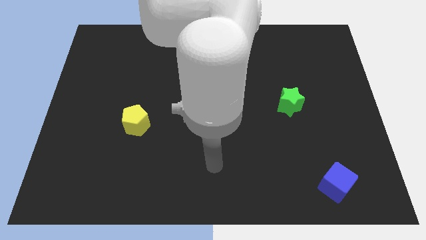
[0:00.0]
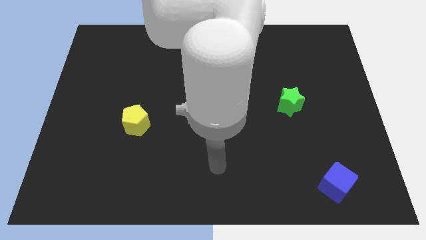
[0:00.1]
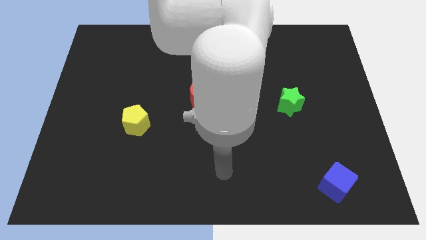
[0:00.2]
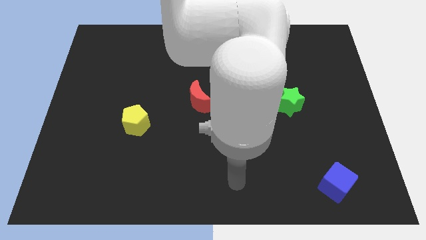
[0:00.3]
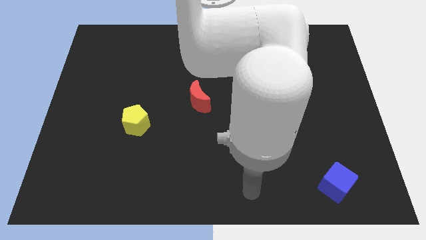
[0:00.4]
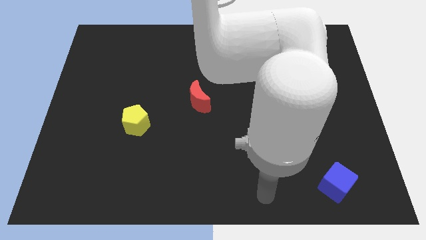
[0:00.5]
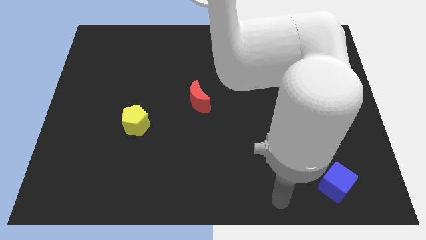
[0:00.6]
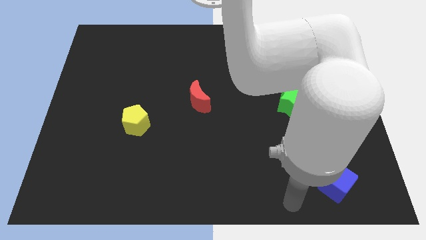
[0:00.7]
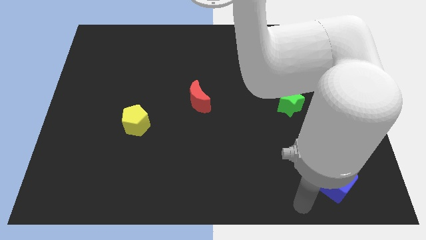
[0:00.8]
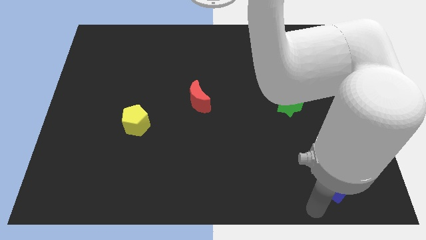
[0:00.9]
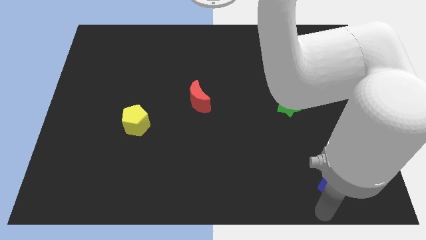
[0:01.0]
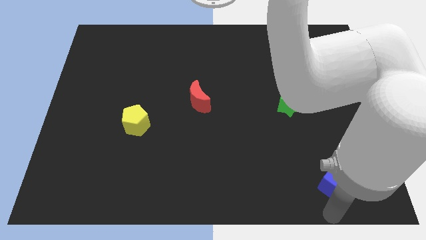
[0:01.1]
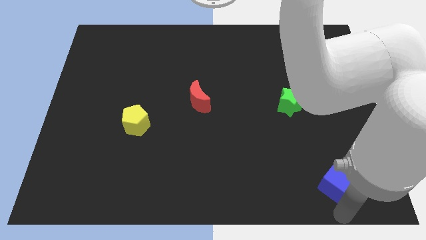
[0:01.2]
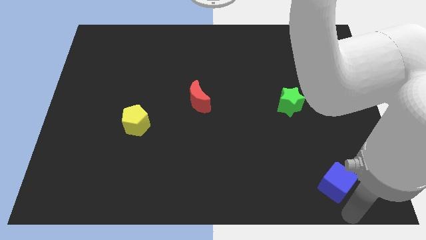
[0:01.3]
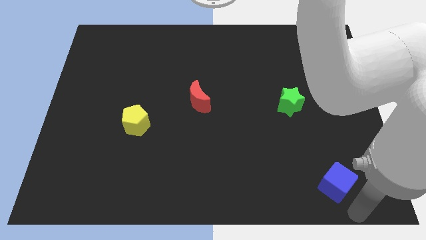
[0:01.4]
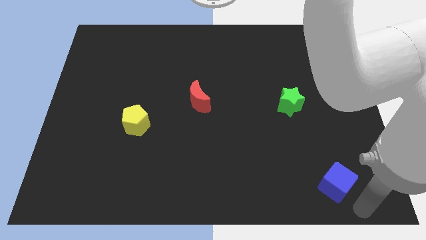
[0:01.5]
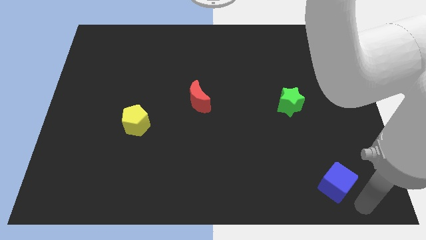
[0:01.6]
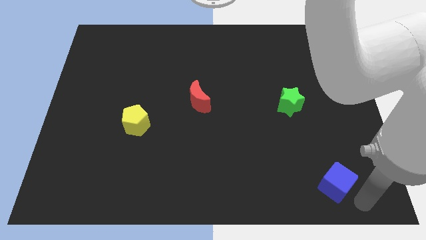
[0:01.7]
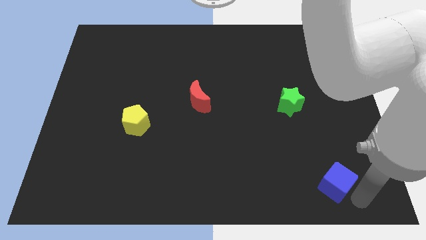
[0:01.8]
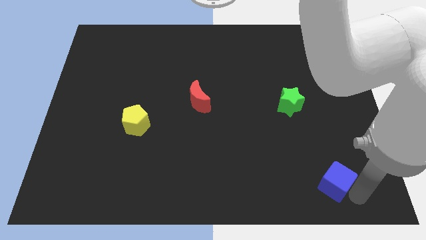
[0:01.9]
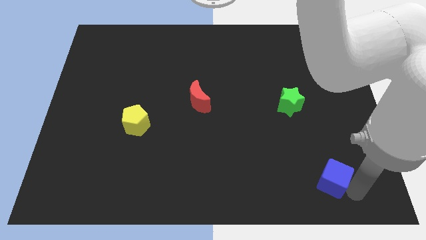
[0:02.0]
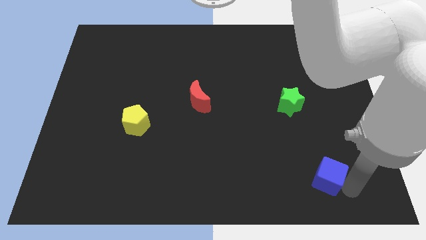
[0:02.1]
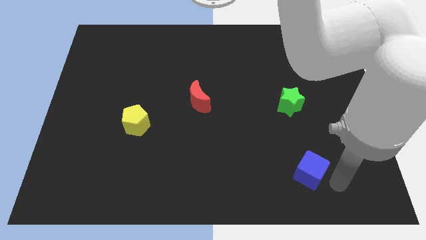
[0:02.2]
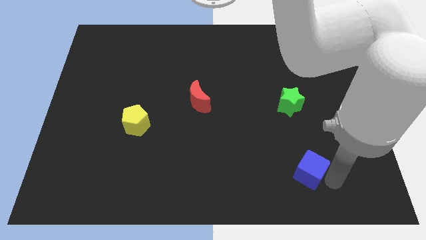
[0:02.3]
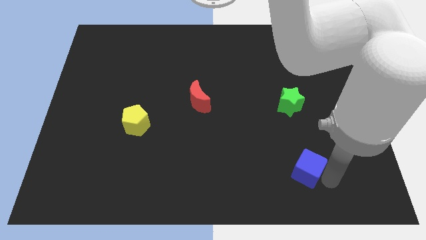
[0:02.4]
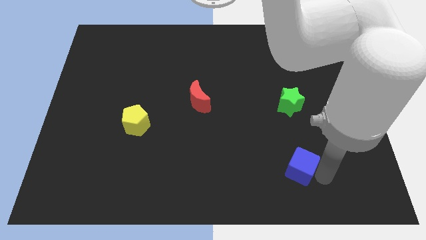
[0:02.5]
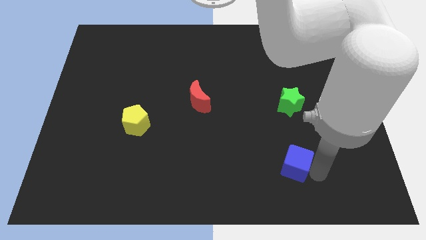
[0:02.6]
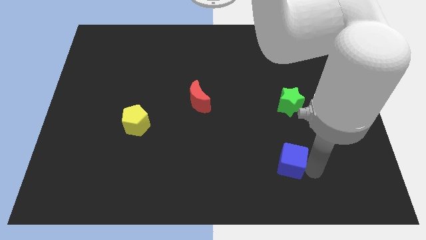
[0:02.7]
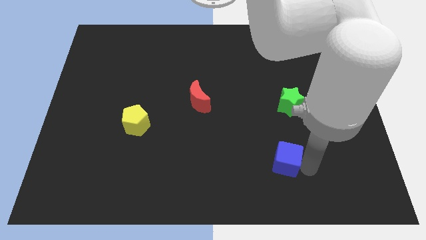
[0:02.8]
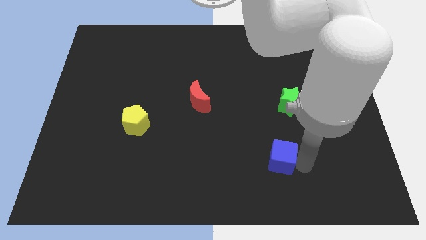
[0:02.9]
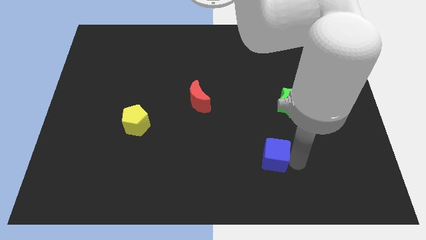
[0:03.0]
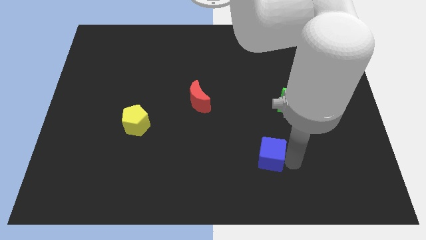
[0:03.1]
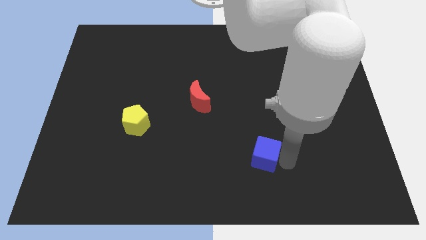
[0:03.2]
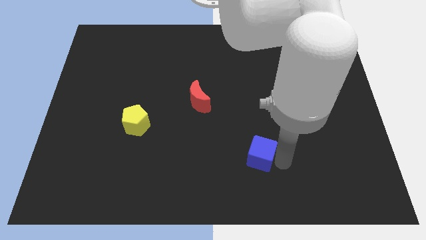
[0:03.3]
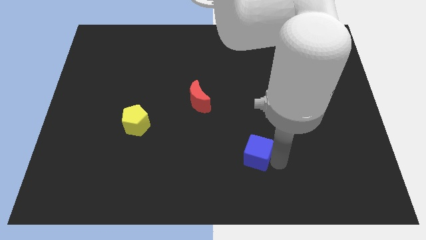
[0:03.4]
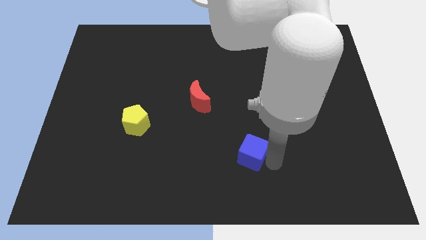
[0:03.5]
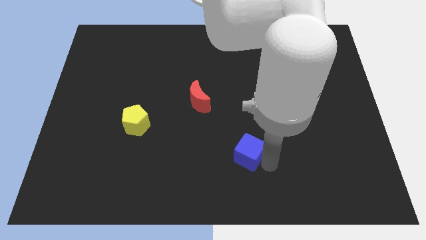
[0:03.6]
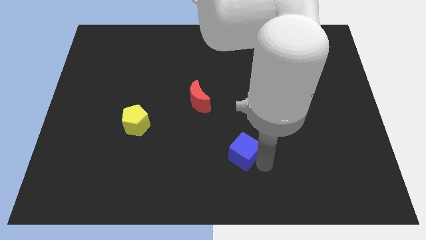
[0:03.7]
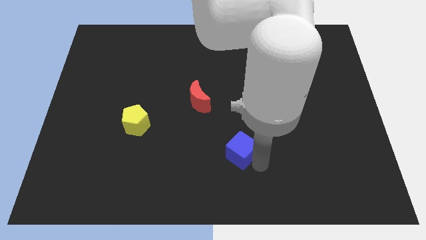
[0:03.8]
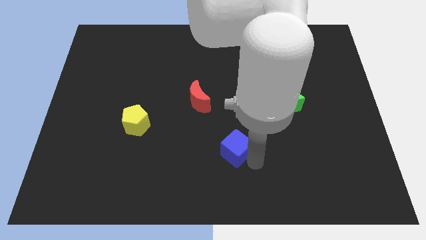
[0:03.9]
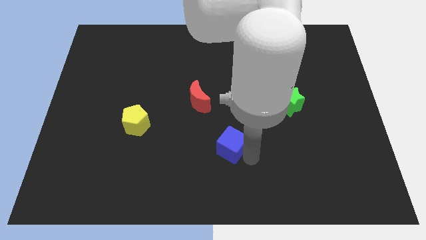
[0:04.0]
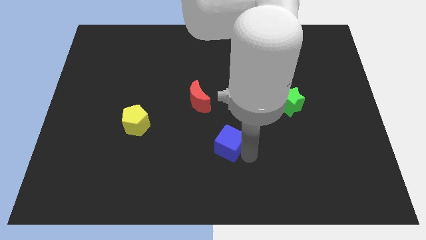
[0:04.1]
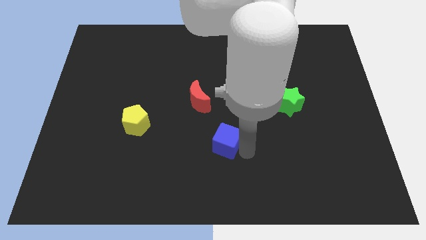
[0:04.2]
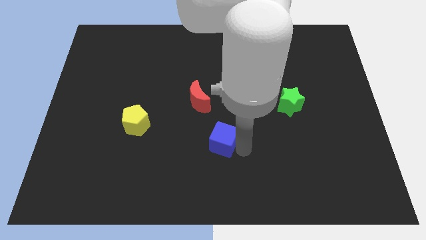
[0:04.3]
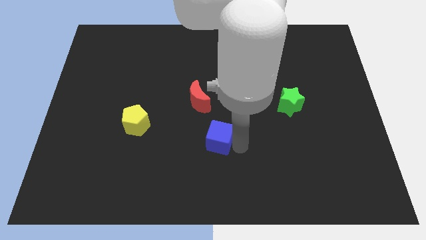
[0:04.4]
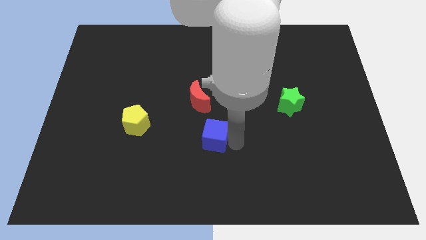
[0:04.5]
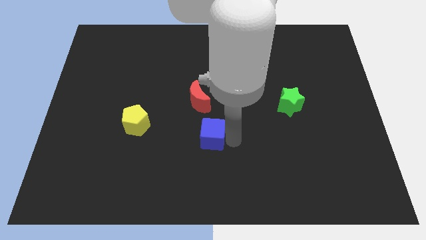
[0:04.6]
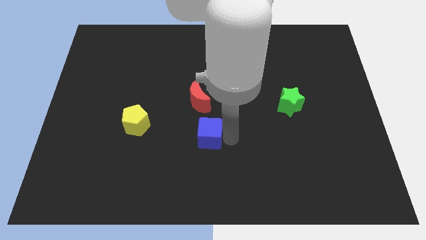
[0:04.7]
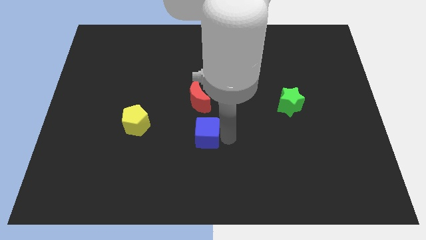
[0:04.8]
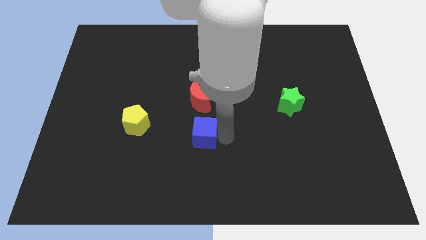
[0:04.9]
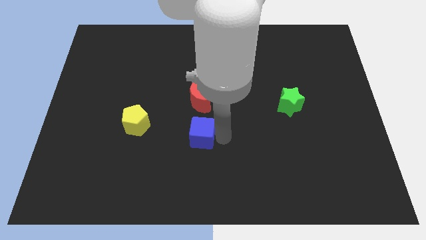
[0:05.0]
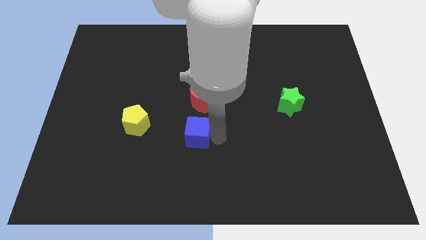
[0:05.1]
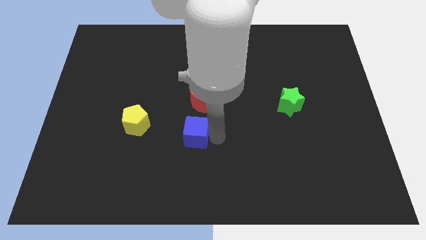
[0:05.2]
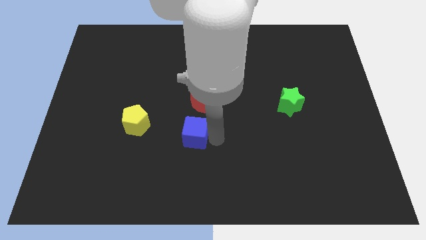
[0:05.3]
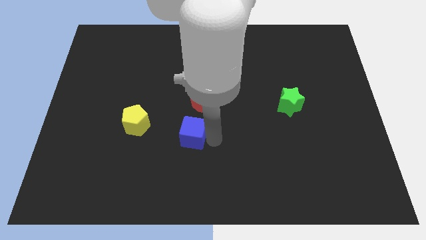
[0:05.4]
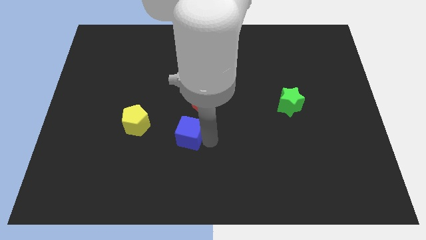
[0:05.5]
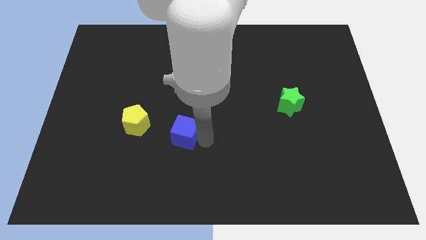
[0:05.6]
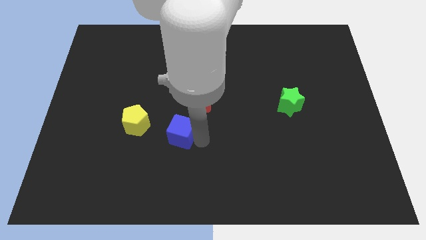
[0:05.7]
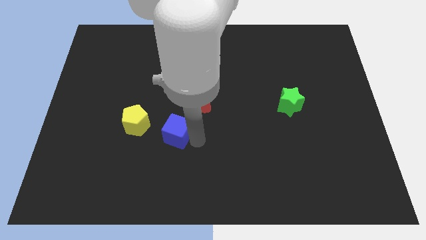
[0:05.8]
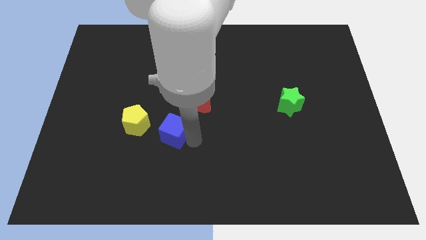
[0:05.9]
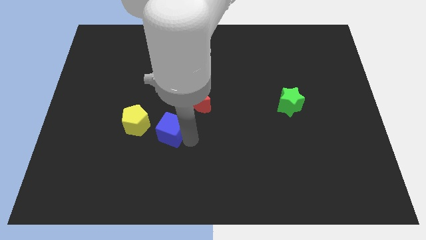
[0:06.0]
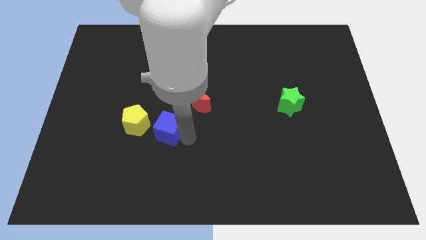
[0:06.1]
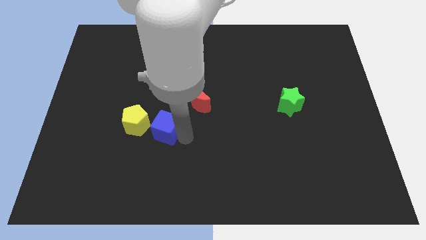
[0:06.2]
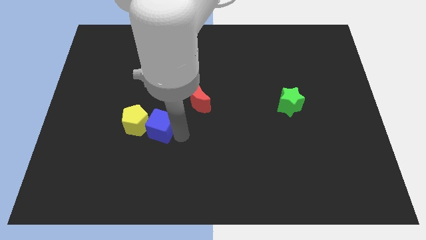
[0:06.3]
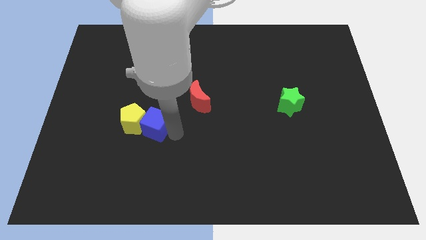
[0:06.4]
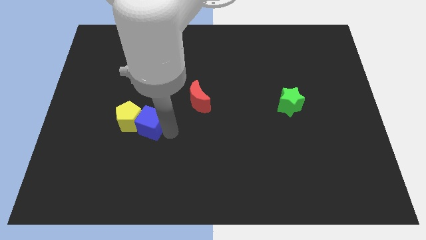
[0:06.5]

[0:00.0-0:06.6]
push the blue cube next to the yellow block

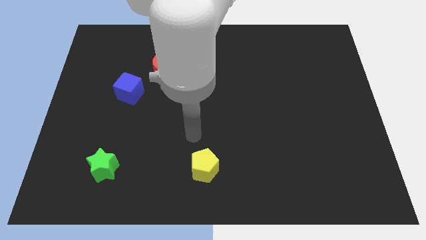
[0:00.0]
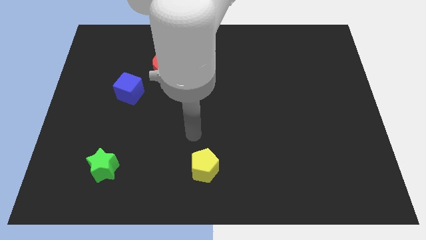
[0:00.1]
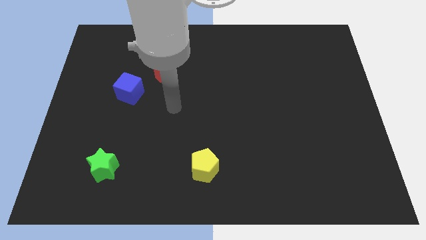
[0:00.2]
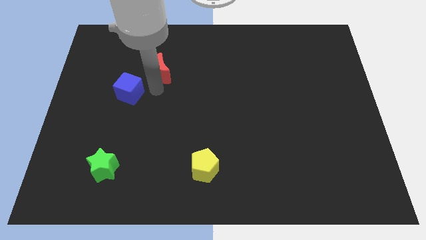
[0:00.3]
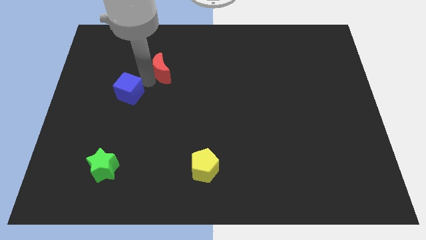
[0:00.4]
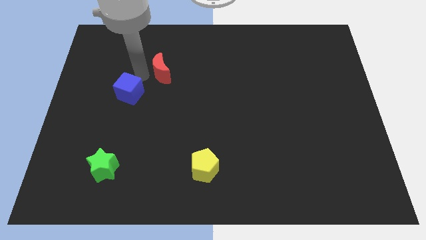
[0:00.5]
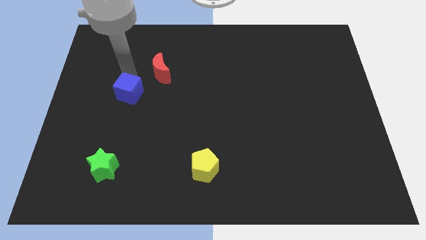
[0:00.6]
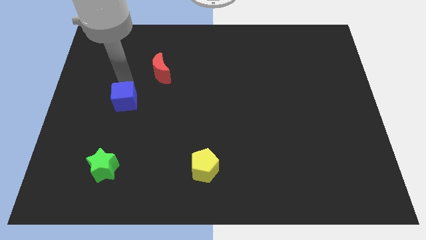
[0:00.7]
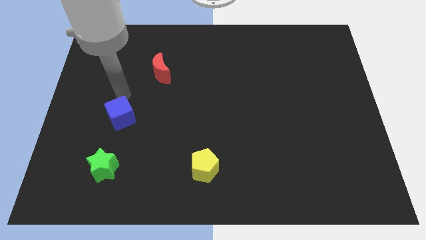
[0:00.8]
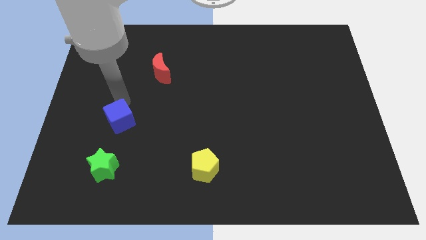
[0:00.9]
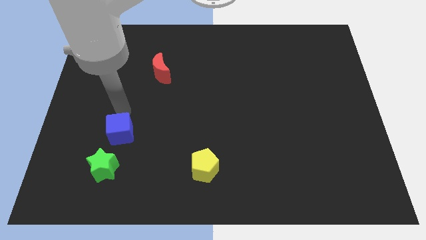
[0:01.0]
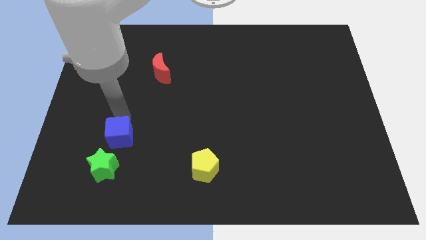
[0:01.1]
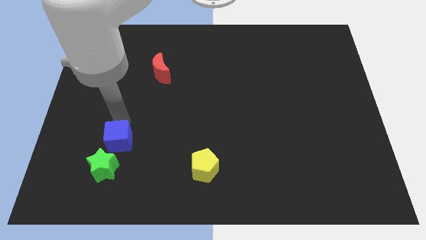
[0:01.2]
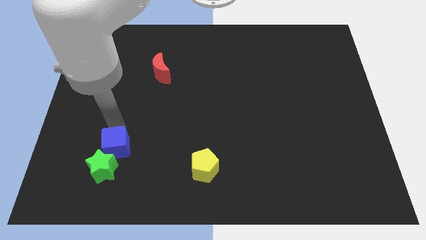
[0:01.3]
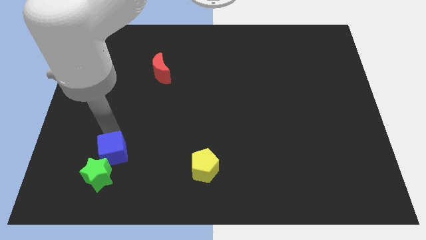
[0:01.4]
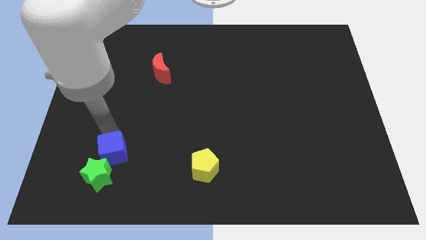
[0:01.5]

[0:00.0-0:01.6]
move the blue block towards the star

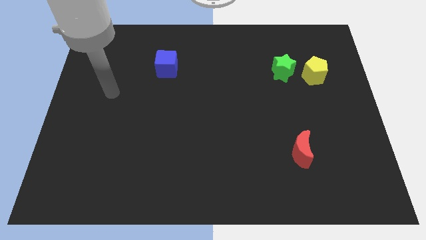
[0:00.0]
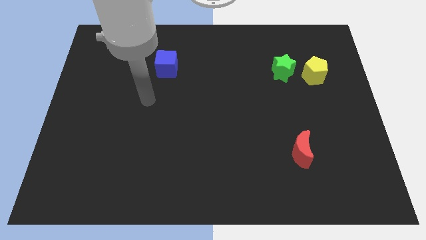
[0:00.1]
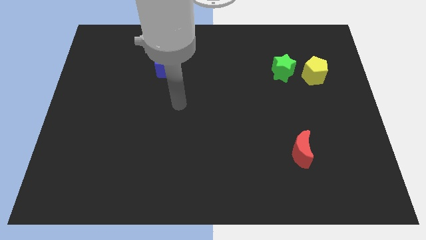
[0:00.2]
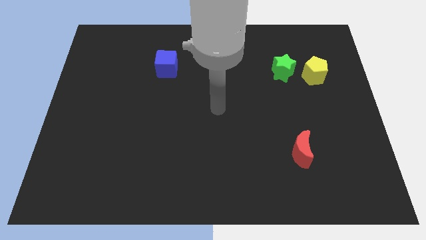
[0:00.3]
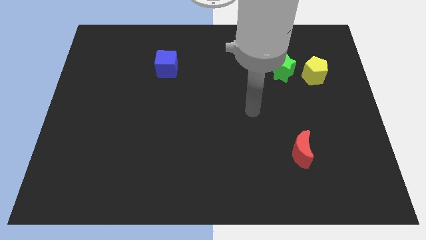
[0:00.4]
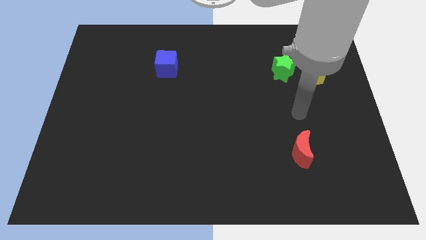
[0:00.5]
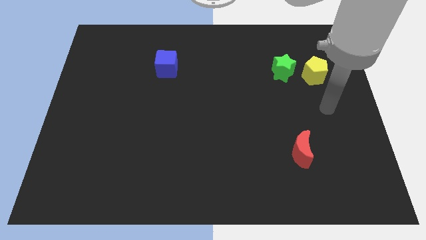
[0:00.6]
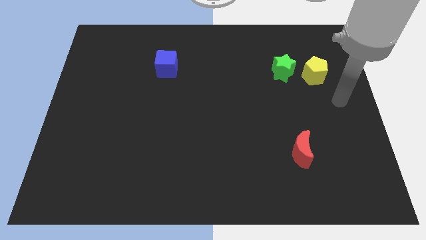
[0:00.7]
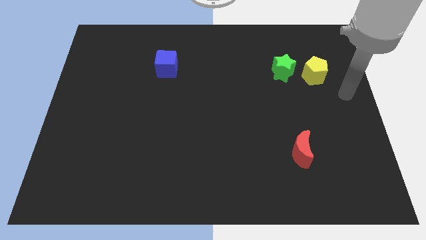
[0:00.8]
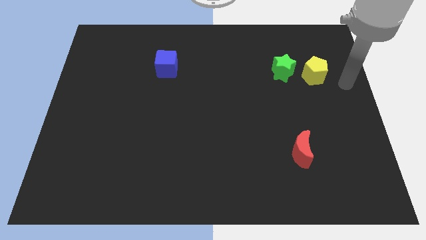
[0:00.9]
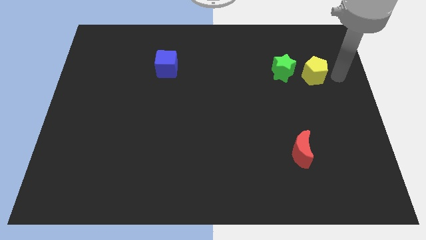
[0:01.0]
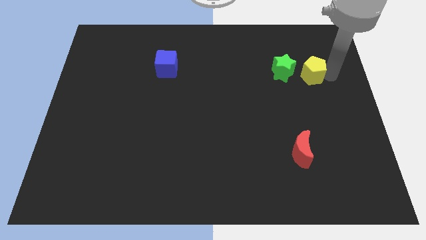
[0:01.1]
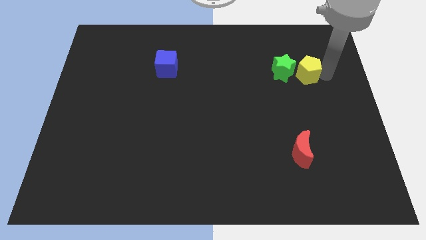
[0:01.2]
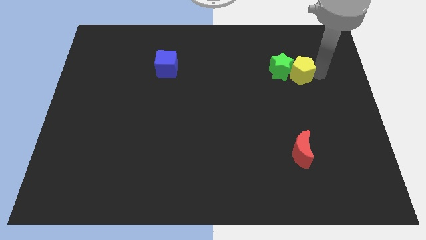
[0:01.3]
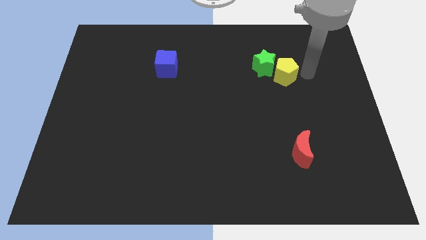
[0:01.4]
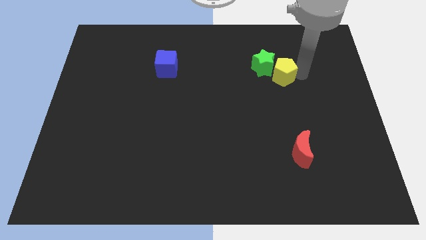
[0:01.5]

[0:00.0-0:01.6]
move the pentagon towards the green star
